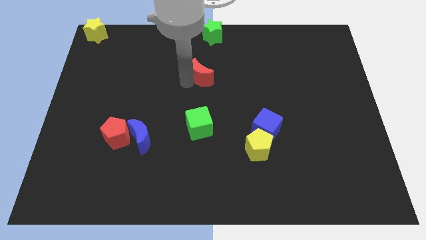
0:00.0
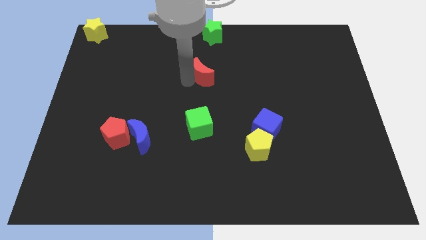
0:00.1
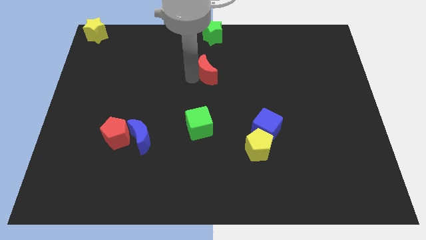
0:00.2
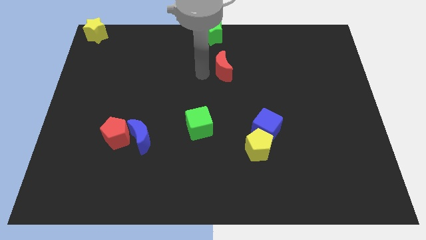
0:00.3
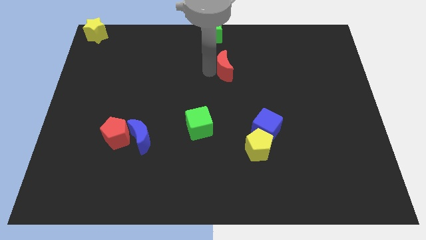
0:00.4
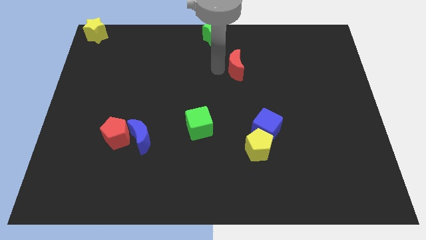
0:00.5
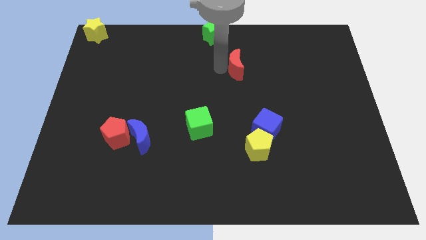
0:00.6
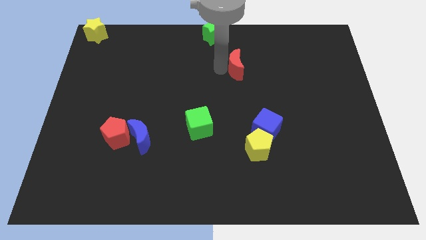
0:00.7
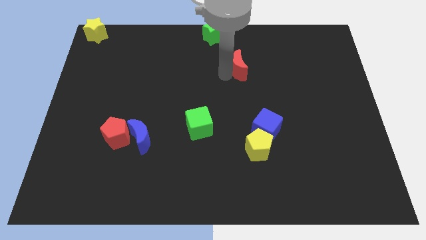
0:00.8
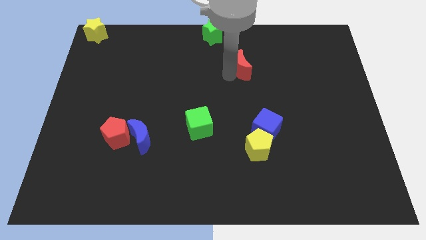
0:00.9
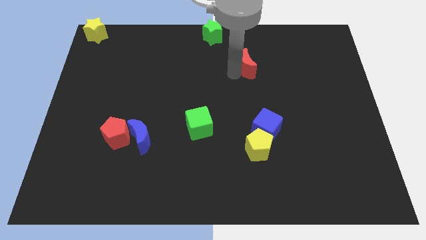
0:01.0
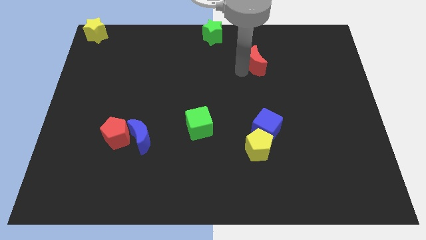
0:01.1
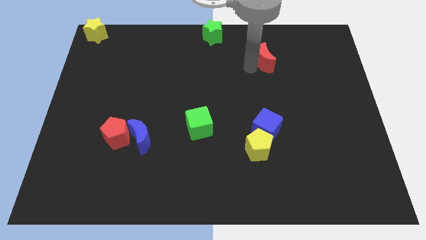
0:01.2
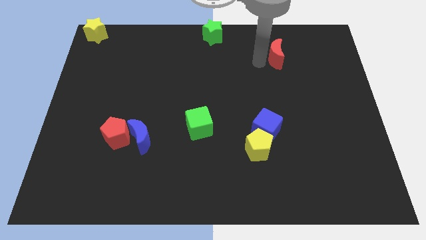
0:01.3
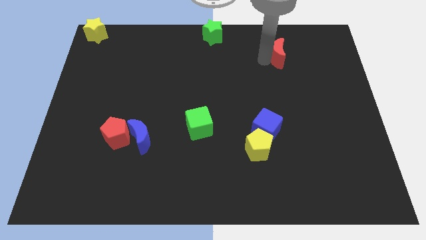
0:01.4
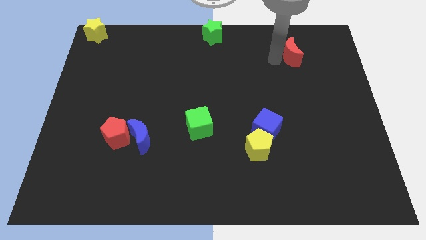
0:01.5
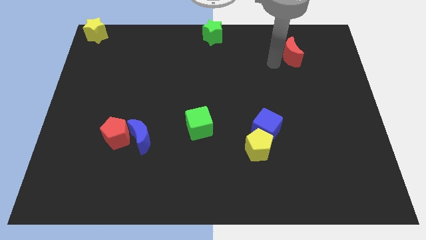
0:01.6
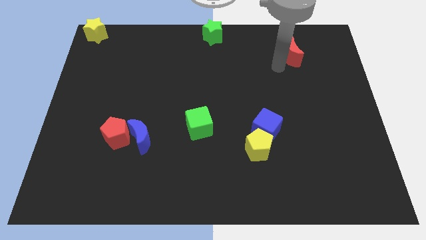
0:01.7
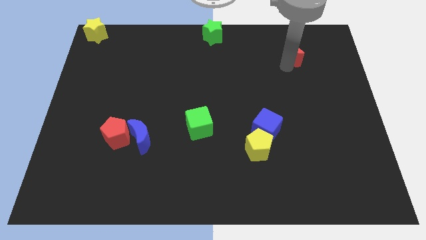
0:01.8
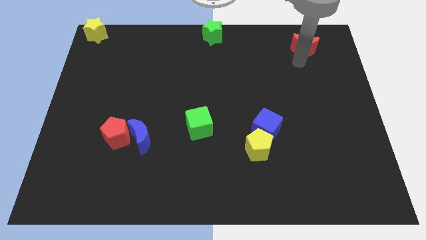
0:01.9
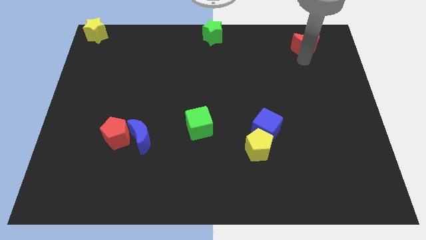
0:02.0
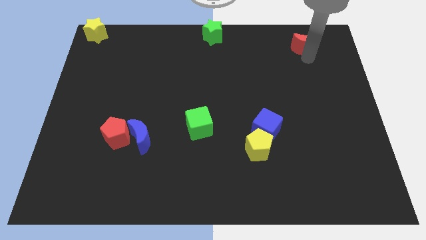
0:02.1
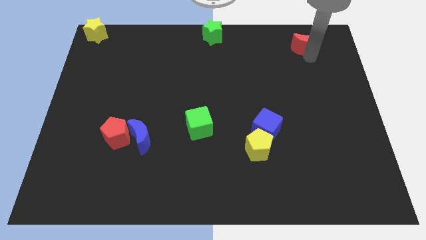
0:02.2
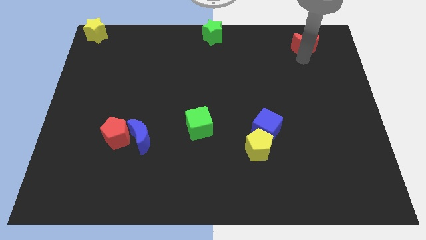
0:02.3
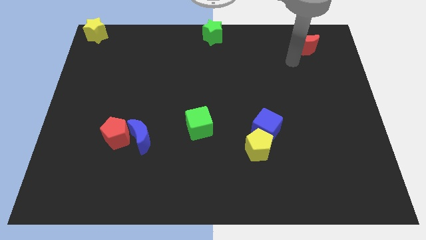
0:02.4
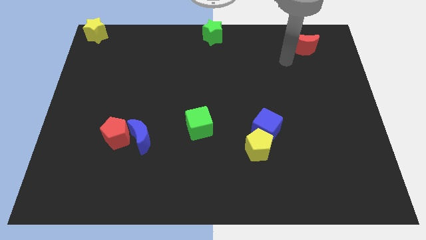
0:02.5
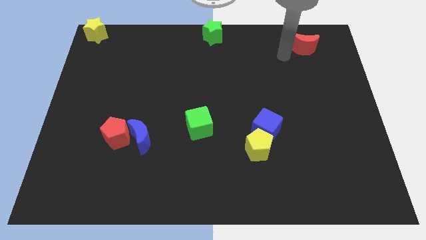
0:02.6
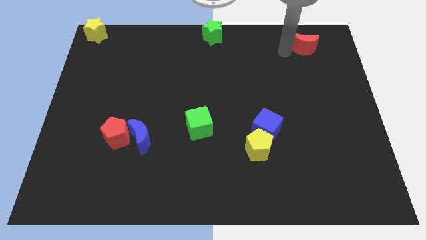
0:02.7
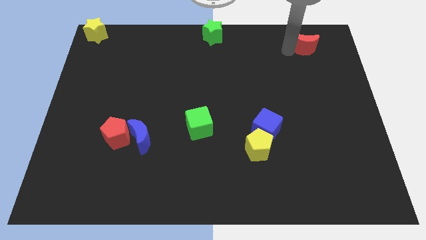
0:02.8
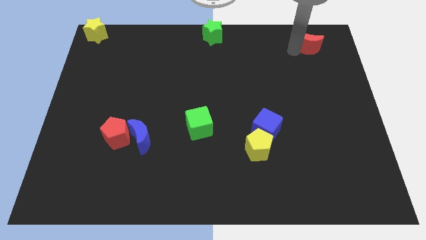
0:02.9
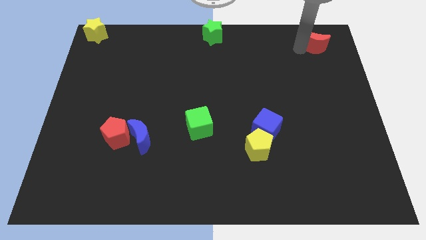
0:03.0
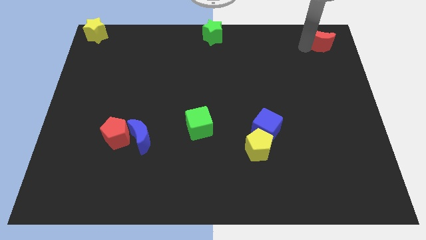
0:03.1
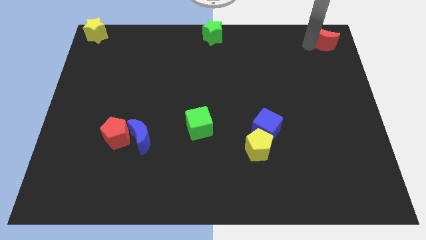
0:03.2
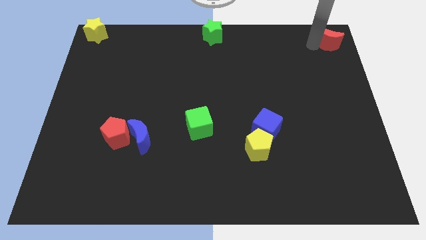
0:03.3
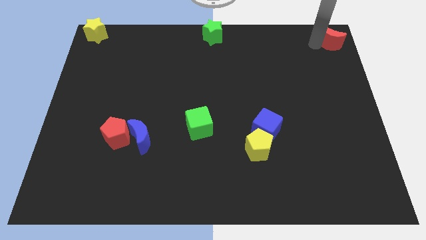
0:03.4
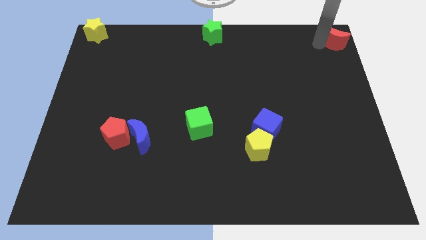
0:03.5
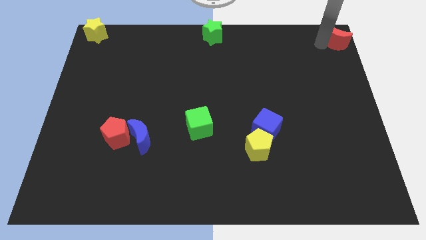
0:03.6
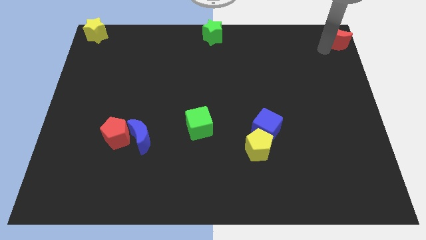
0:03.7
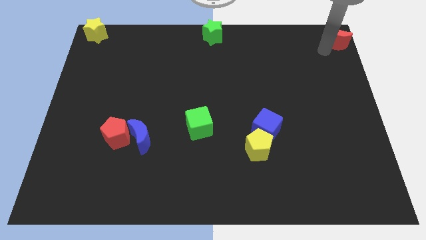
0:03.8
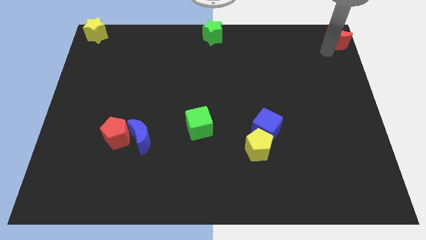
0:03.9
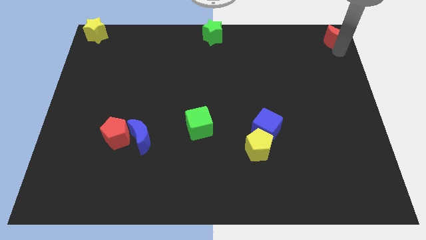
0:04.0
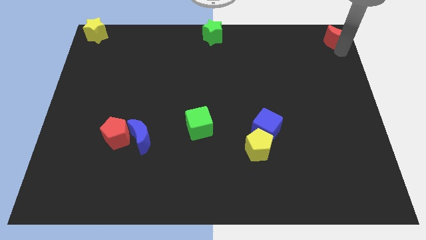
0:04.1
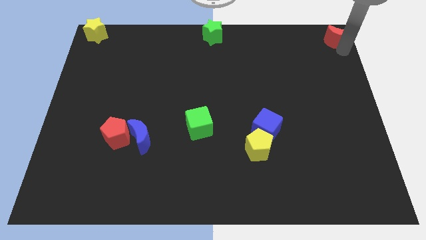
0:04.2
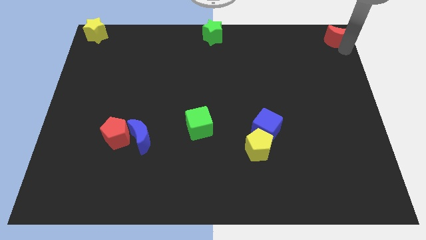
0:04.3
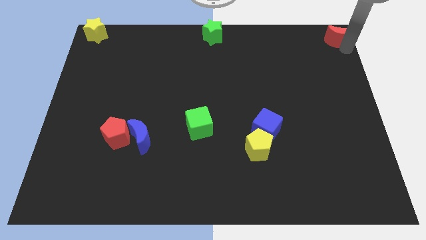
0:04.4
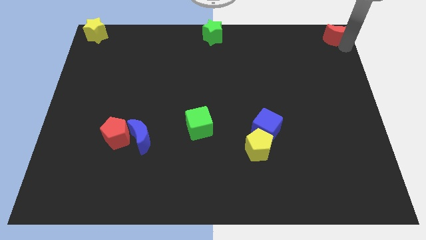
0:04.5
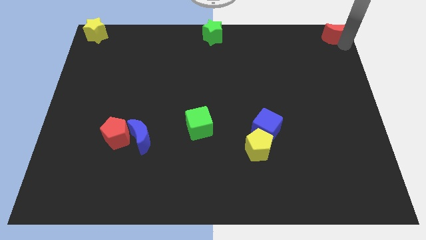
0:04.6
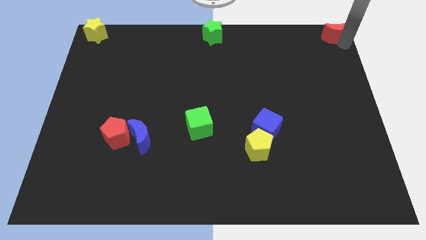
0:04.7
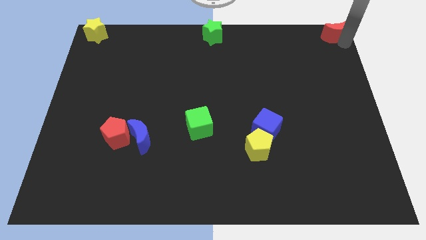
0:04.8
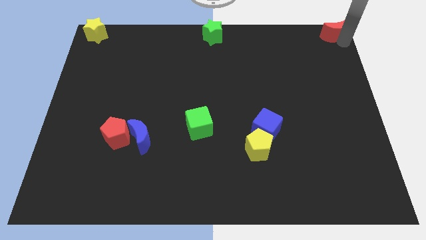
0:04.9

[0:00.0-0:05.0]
place the red moon at the top right corner of the board

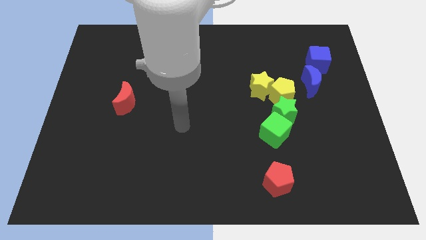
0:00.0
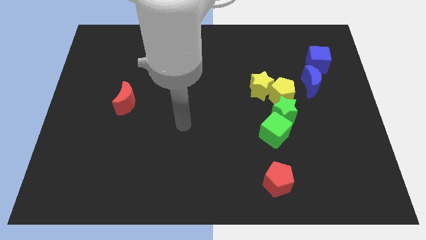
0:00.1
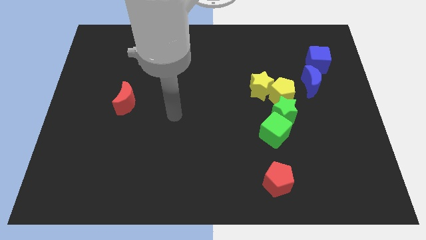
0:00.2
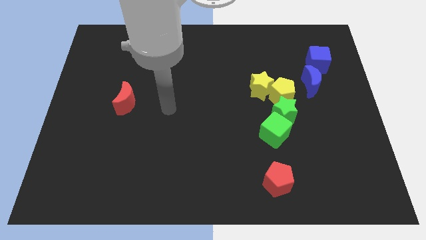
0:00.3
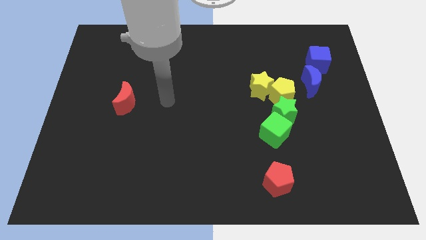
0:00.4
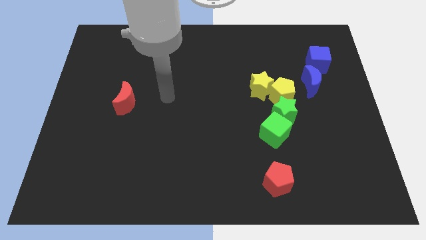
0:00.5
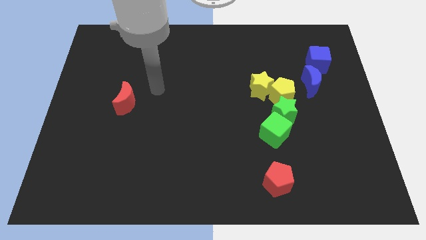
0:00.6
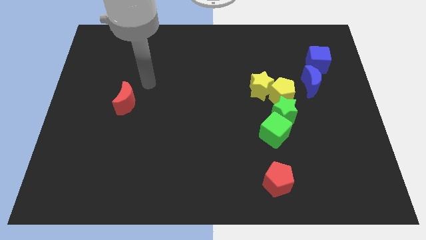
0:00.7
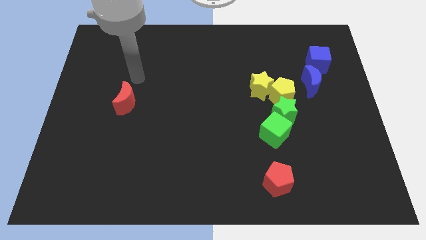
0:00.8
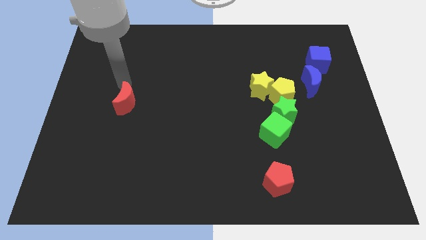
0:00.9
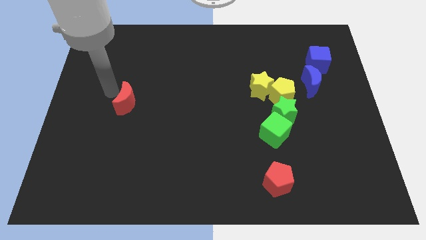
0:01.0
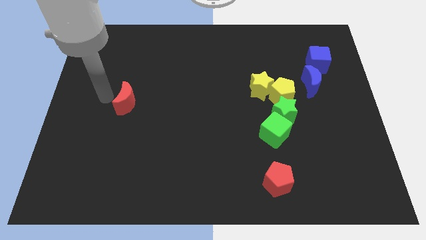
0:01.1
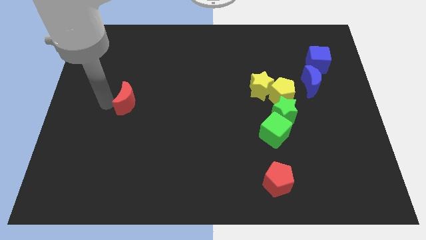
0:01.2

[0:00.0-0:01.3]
move arm to the left side of the red moon

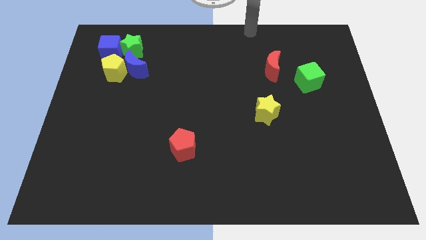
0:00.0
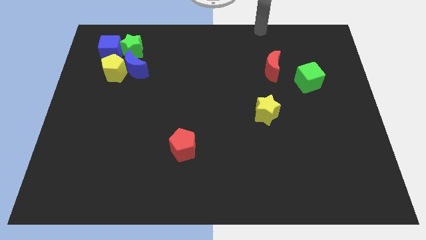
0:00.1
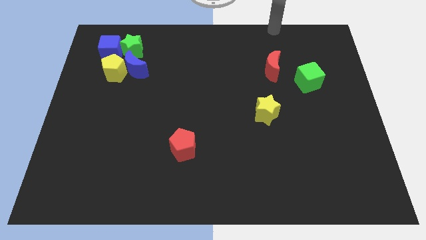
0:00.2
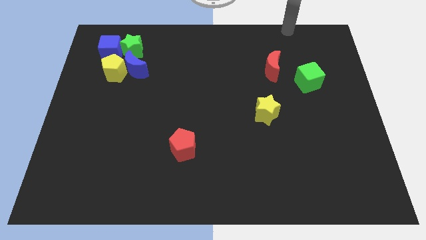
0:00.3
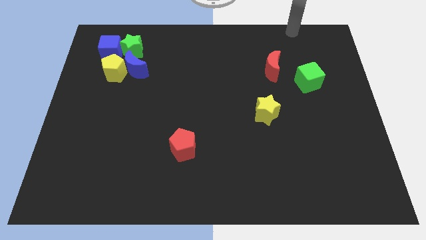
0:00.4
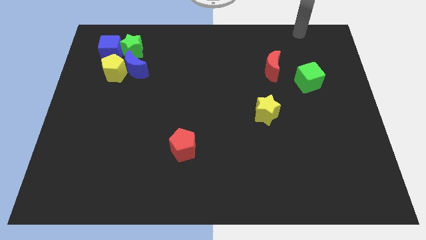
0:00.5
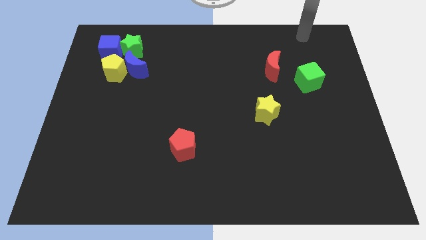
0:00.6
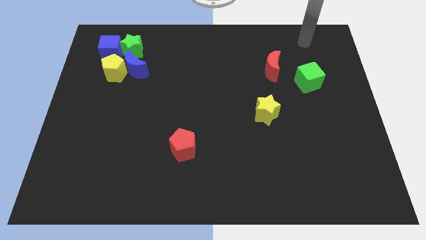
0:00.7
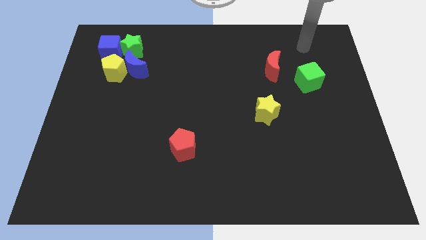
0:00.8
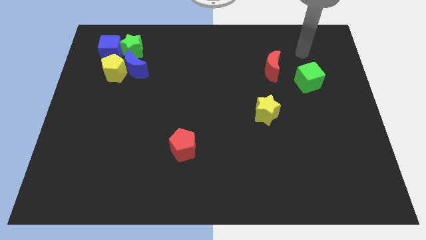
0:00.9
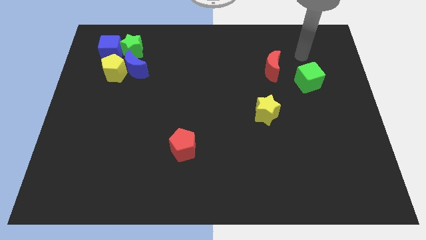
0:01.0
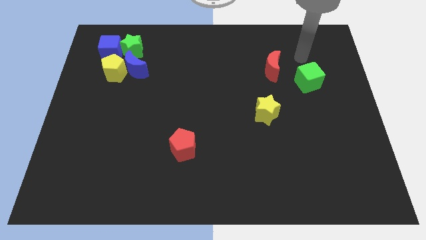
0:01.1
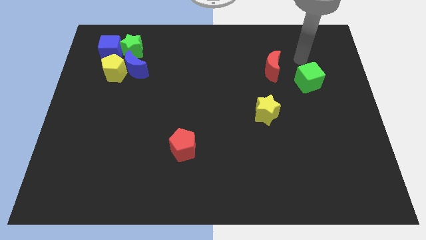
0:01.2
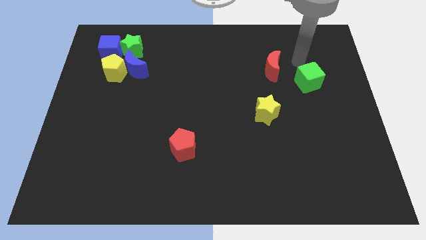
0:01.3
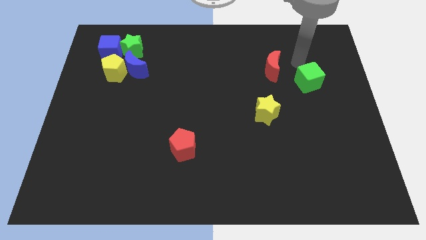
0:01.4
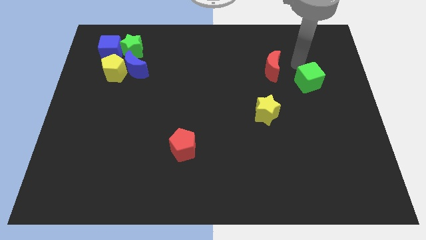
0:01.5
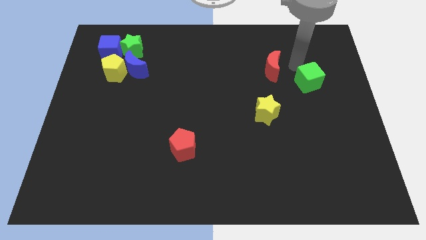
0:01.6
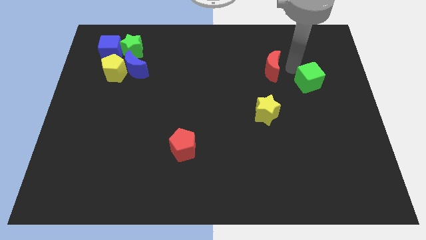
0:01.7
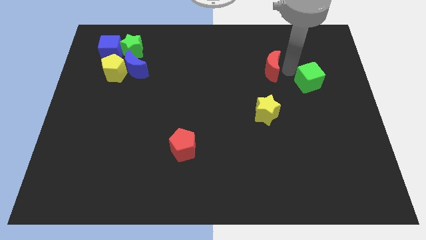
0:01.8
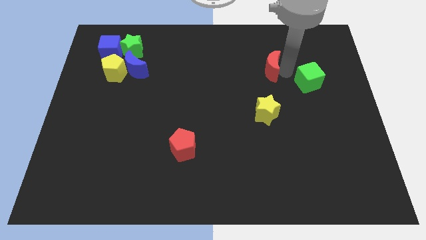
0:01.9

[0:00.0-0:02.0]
point your arm at the right of the red crescent

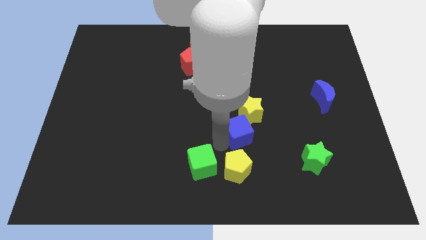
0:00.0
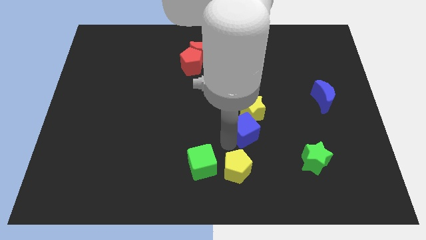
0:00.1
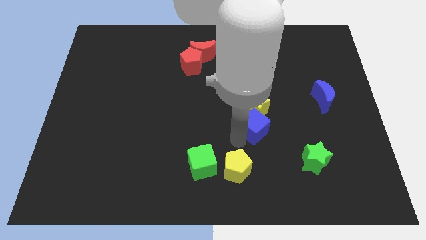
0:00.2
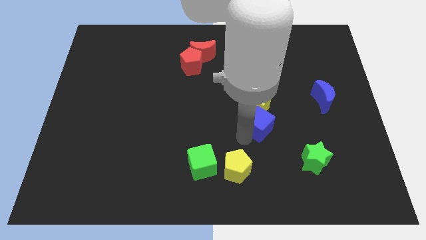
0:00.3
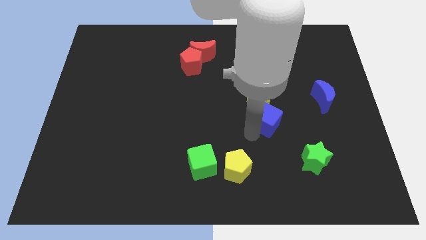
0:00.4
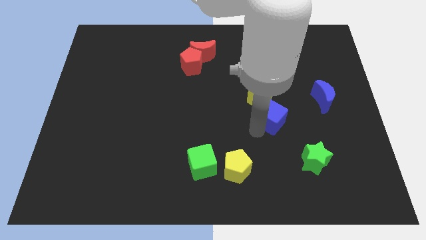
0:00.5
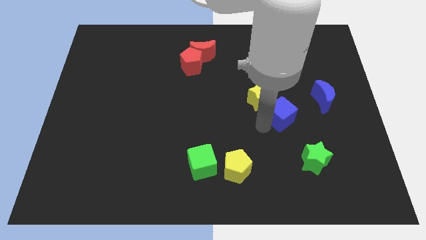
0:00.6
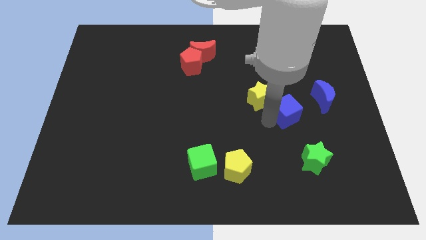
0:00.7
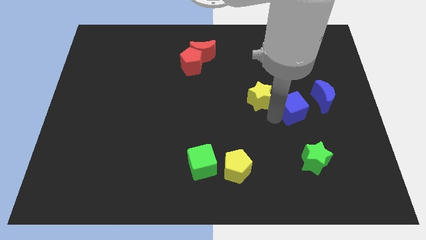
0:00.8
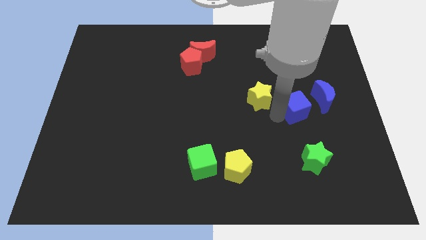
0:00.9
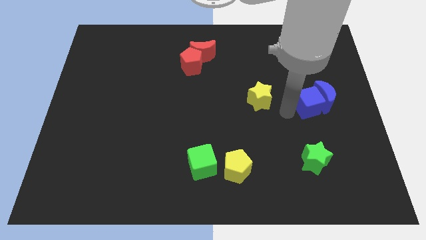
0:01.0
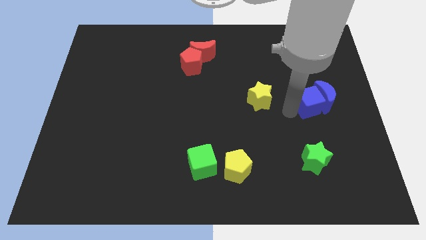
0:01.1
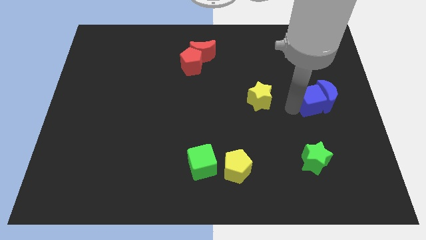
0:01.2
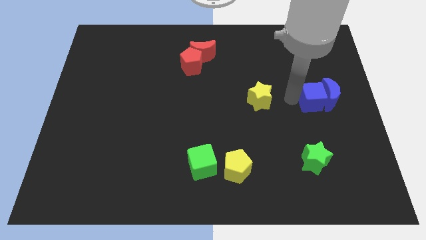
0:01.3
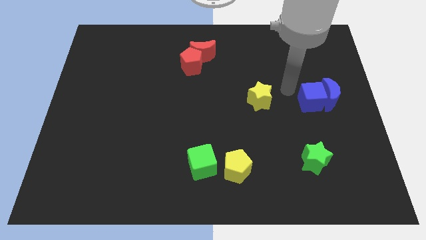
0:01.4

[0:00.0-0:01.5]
place the blue cube parallel left to the blue moon
